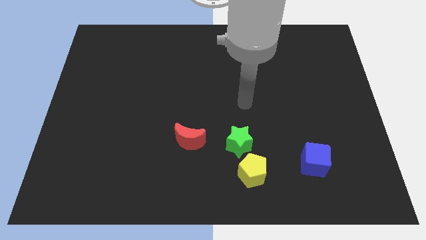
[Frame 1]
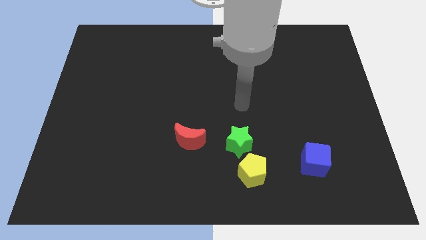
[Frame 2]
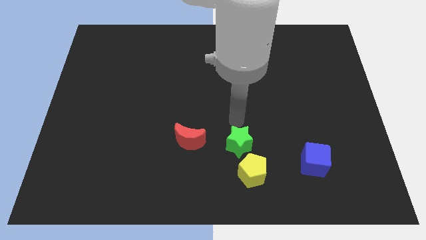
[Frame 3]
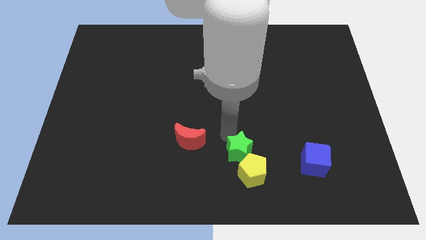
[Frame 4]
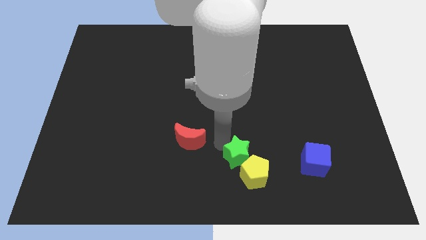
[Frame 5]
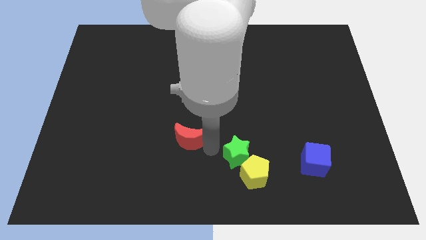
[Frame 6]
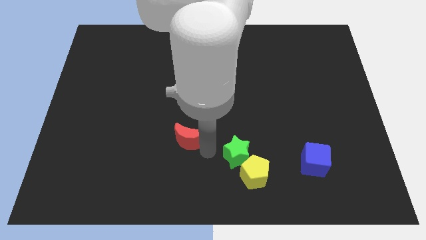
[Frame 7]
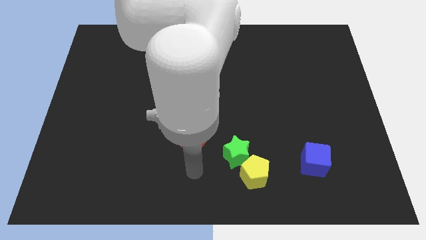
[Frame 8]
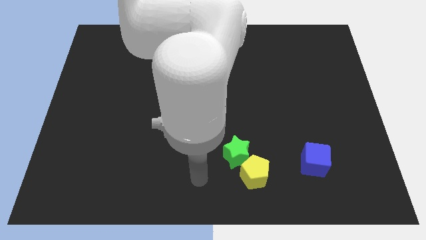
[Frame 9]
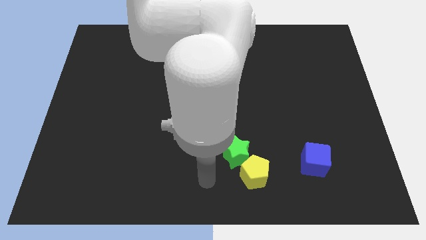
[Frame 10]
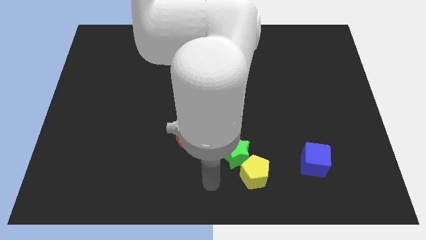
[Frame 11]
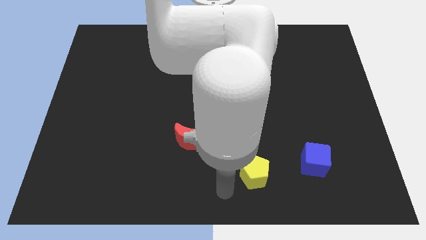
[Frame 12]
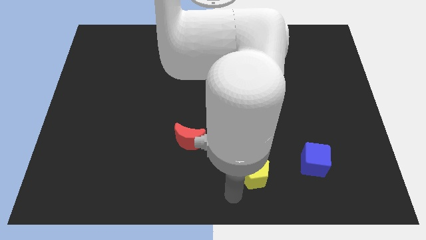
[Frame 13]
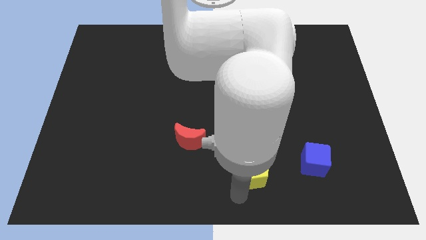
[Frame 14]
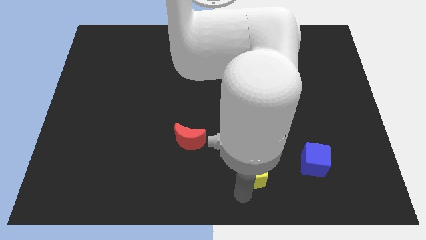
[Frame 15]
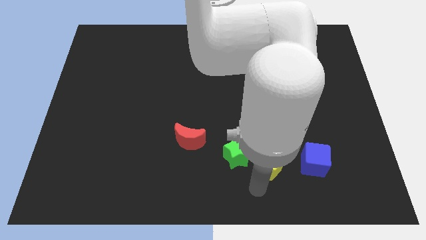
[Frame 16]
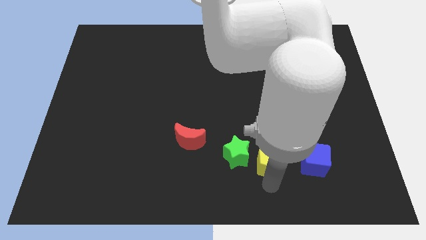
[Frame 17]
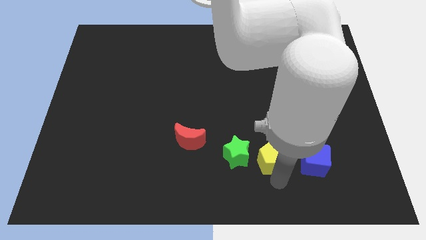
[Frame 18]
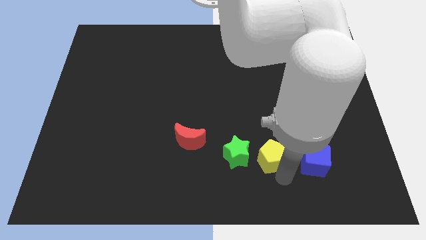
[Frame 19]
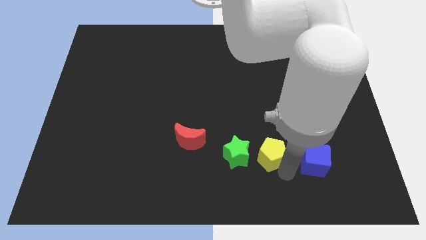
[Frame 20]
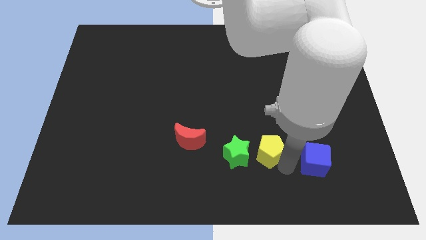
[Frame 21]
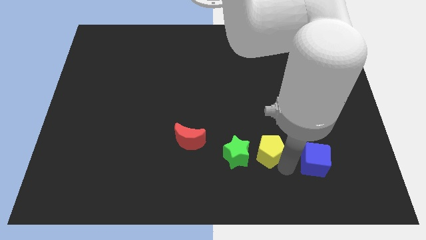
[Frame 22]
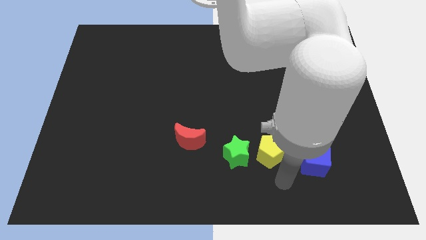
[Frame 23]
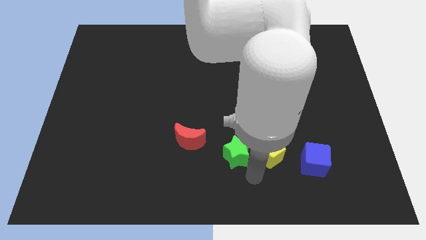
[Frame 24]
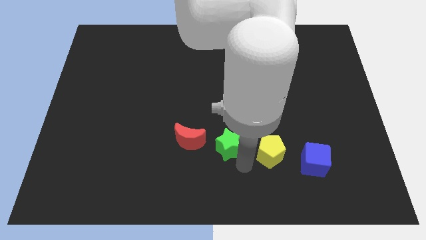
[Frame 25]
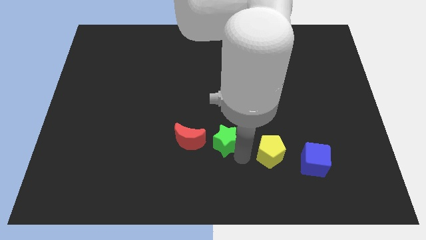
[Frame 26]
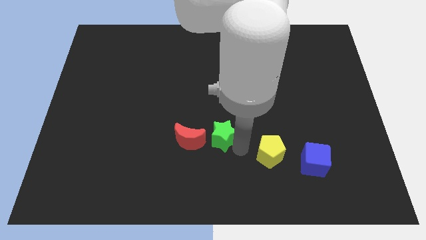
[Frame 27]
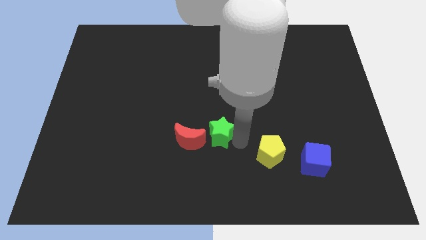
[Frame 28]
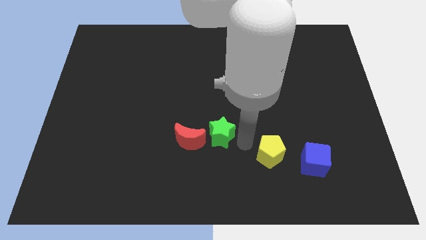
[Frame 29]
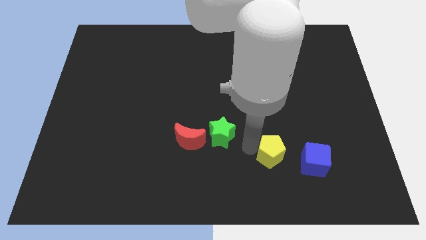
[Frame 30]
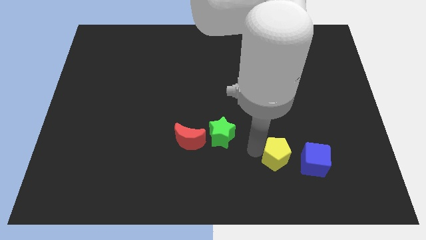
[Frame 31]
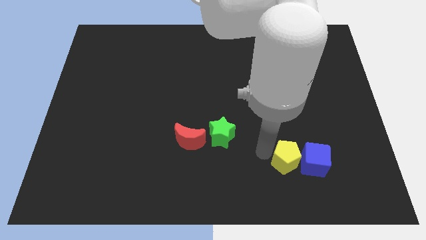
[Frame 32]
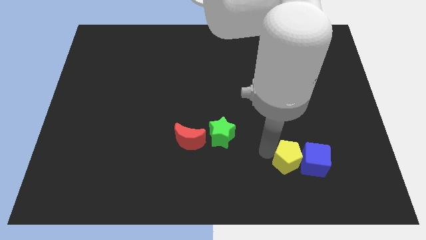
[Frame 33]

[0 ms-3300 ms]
move the yellow pentagon to the blue block

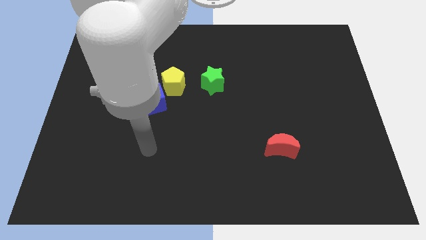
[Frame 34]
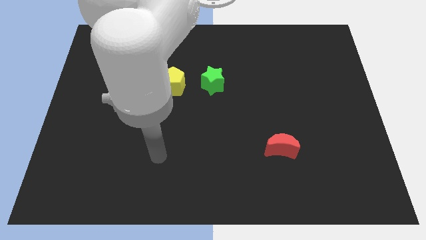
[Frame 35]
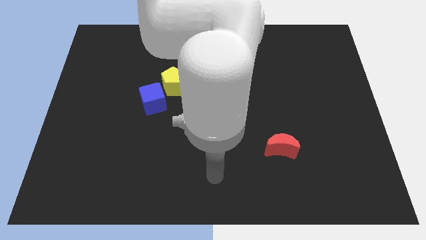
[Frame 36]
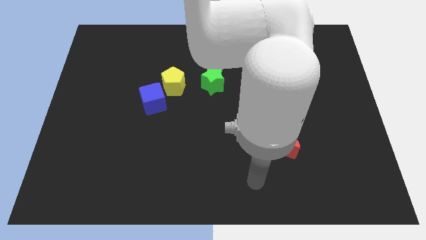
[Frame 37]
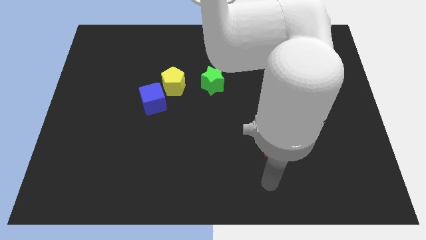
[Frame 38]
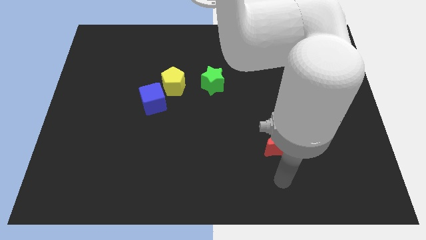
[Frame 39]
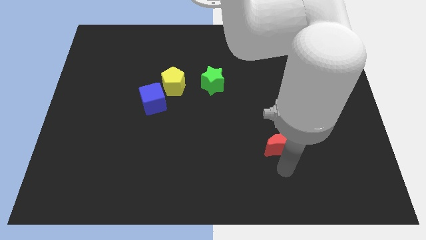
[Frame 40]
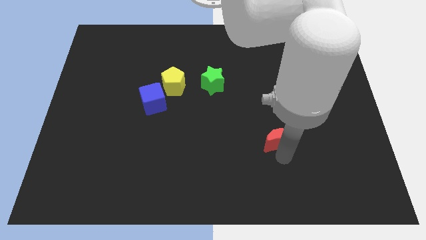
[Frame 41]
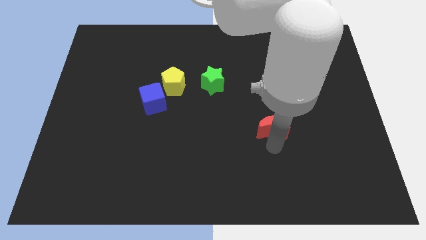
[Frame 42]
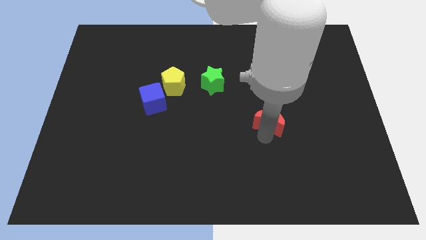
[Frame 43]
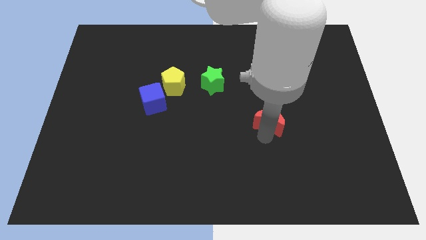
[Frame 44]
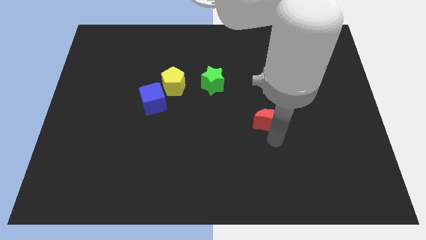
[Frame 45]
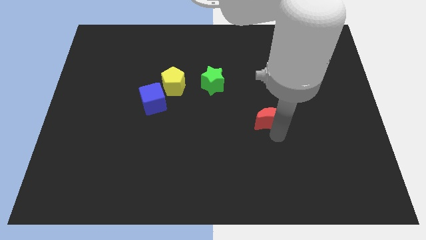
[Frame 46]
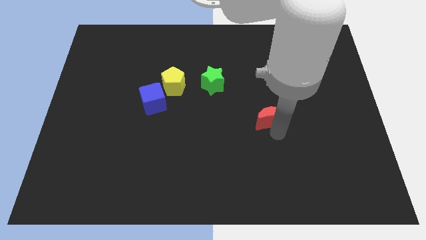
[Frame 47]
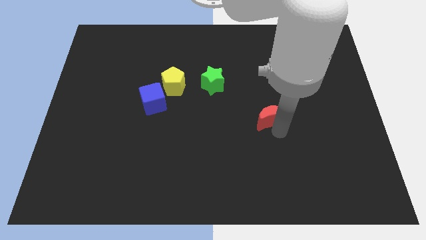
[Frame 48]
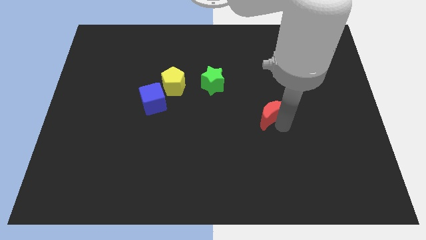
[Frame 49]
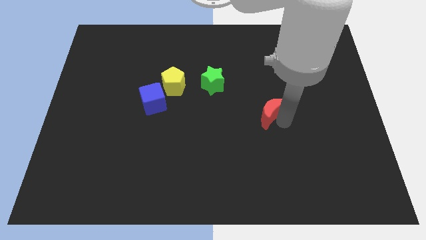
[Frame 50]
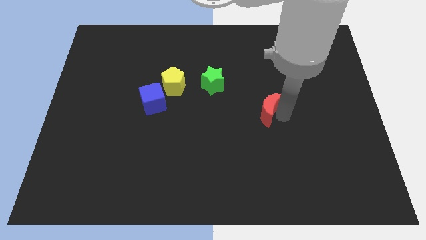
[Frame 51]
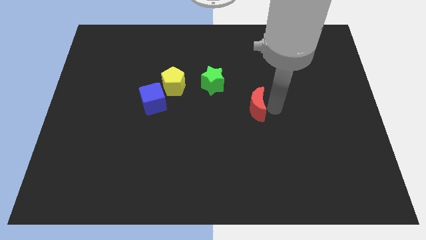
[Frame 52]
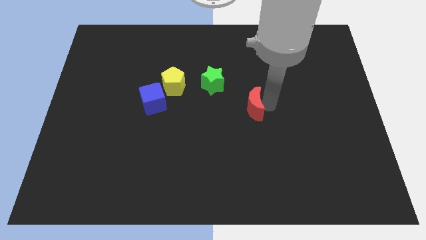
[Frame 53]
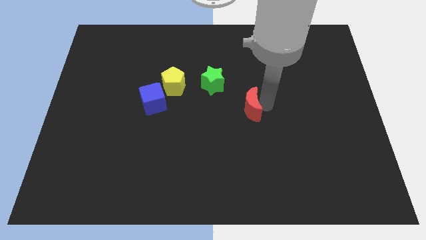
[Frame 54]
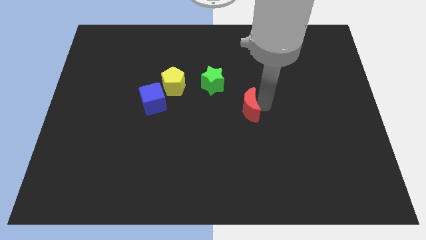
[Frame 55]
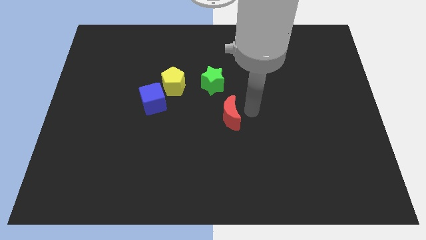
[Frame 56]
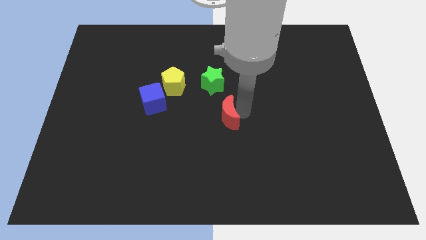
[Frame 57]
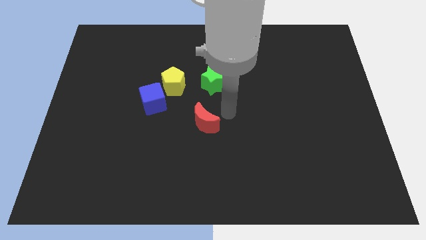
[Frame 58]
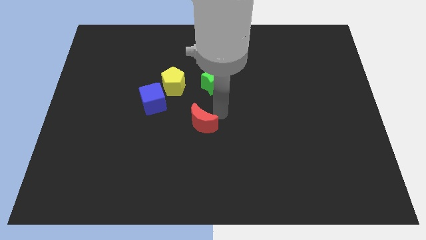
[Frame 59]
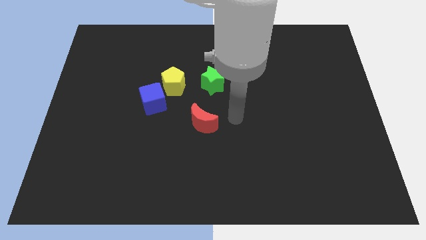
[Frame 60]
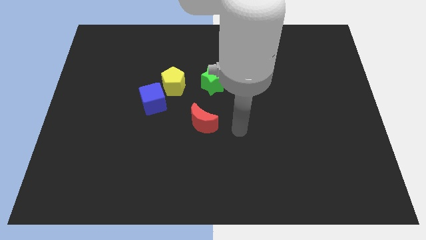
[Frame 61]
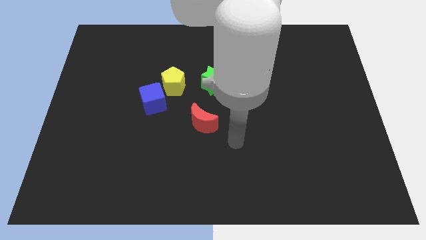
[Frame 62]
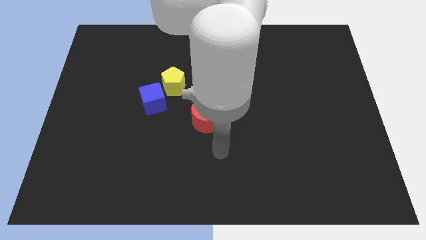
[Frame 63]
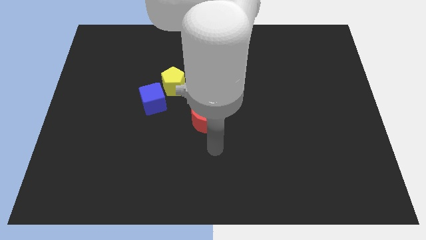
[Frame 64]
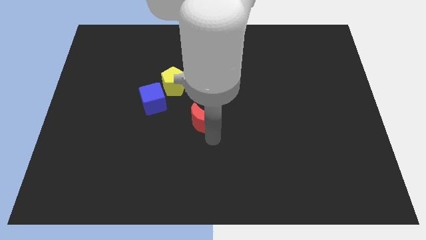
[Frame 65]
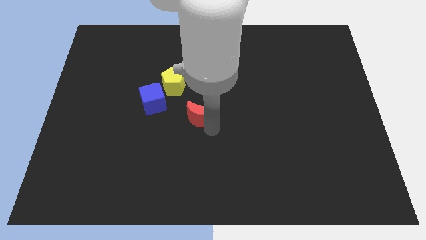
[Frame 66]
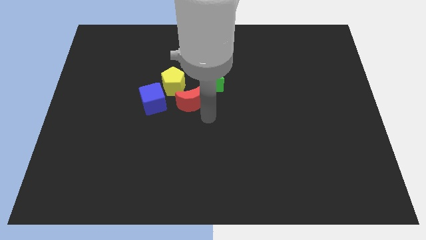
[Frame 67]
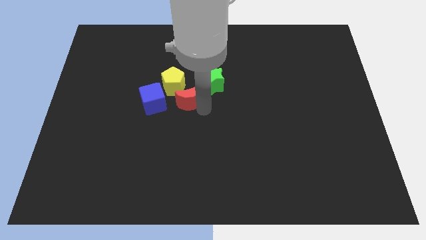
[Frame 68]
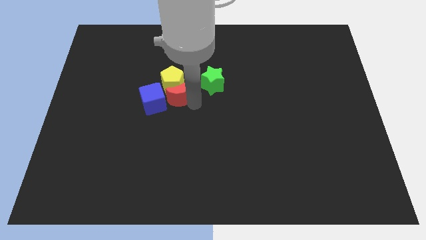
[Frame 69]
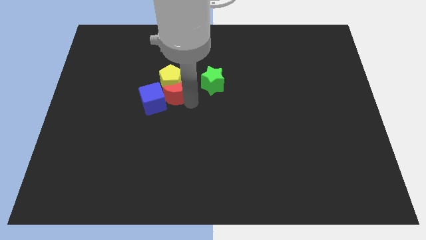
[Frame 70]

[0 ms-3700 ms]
put the moon towards the yellow pentagon

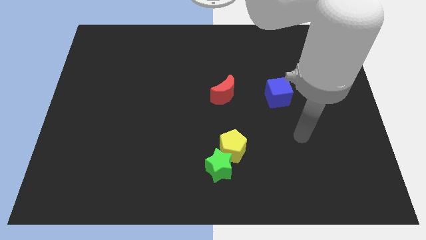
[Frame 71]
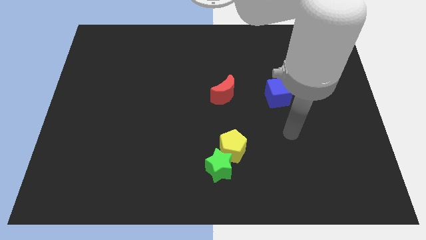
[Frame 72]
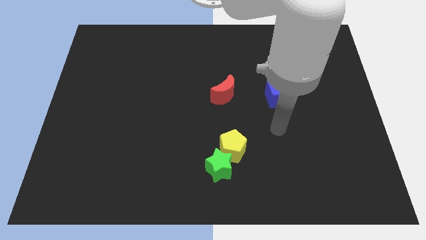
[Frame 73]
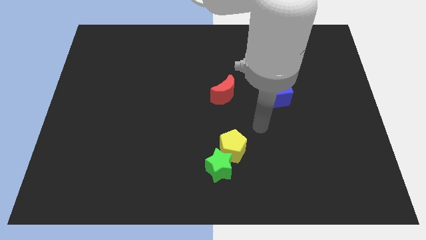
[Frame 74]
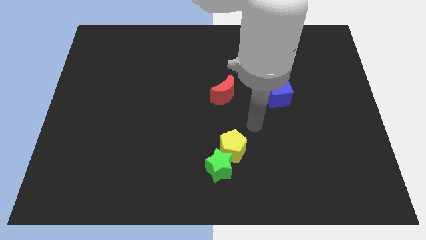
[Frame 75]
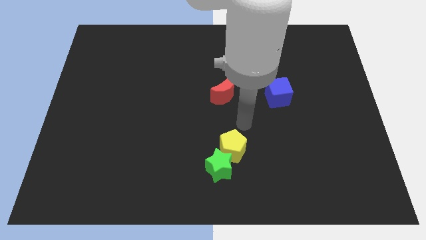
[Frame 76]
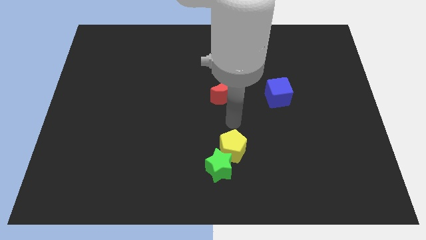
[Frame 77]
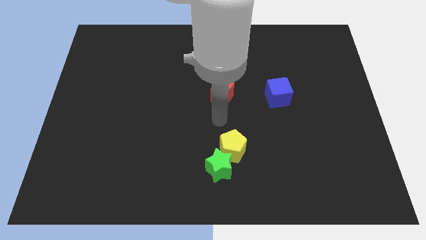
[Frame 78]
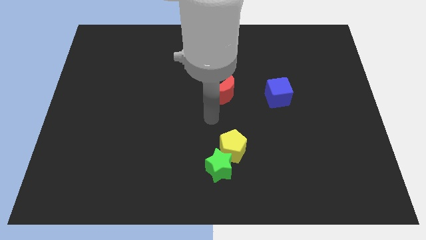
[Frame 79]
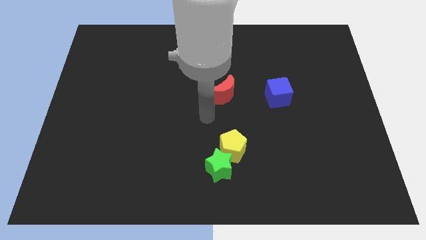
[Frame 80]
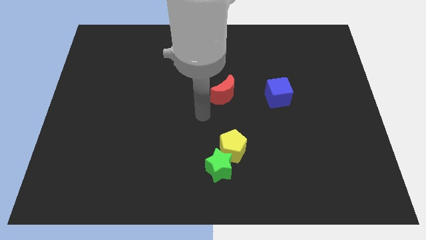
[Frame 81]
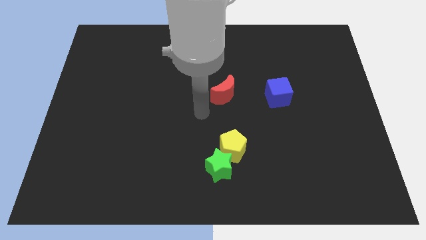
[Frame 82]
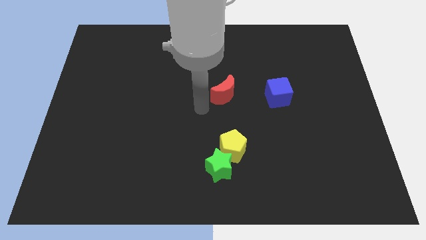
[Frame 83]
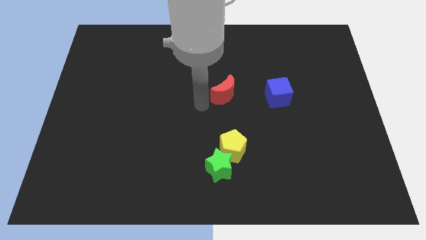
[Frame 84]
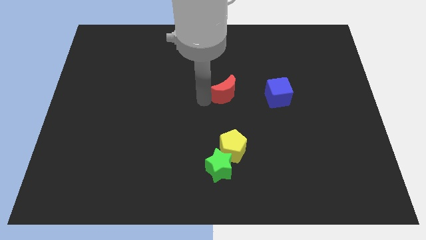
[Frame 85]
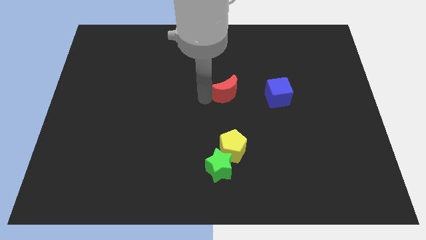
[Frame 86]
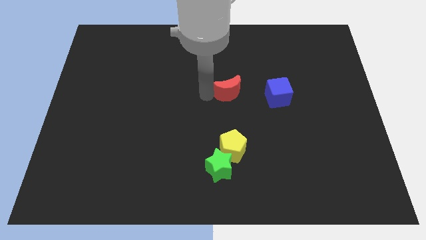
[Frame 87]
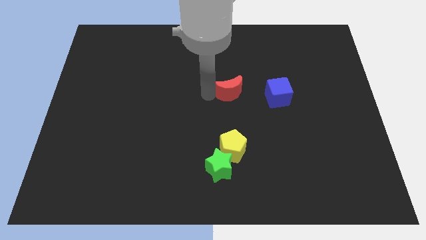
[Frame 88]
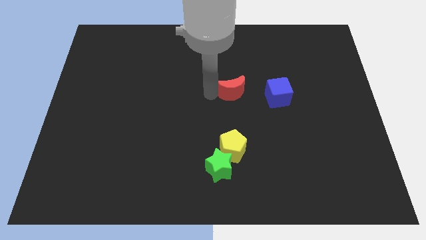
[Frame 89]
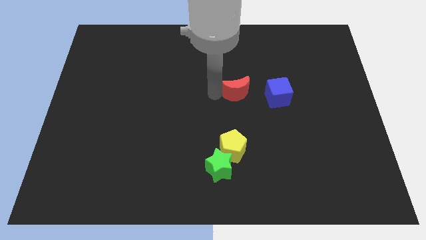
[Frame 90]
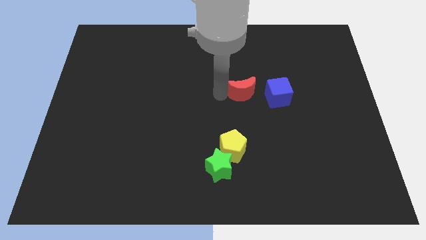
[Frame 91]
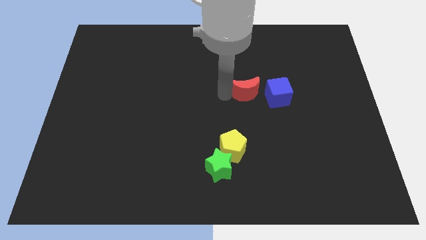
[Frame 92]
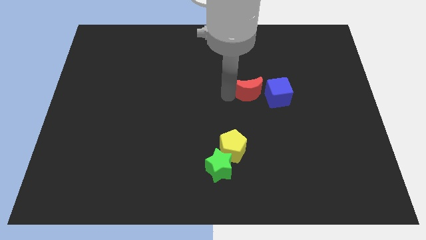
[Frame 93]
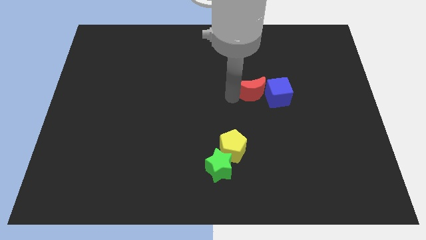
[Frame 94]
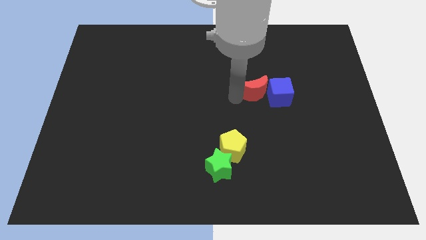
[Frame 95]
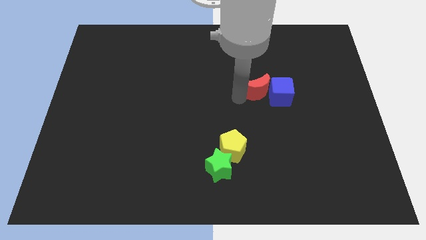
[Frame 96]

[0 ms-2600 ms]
slide the red block towards the blue cube
